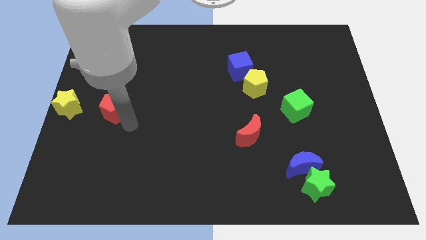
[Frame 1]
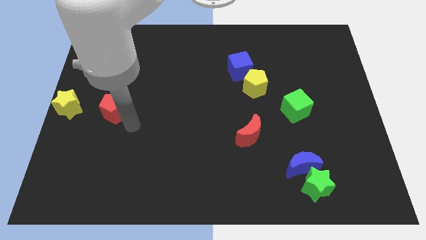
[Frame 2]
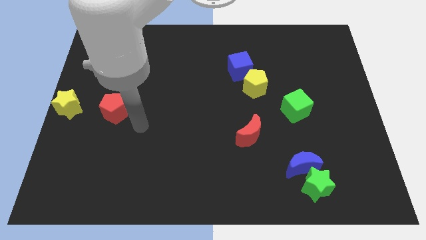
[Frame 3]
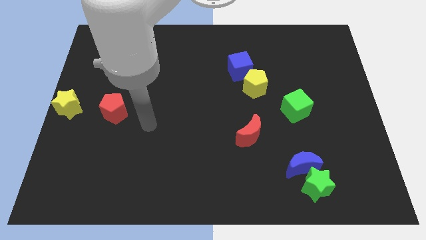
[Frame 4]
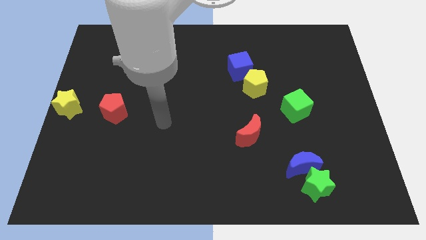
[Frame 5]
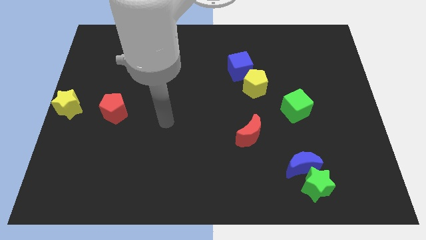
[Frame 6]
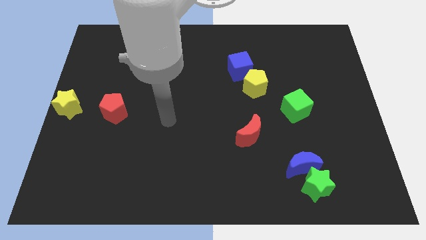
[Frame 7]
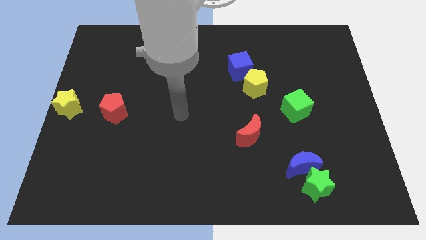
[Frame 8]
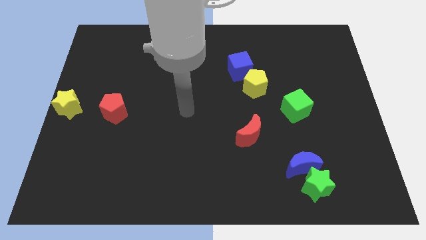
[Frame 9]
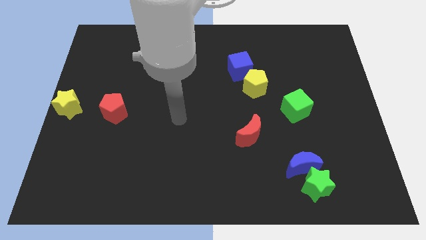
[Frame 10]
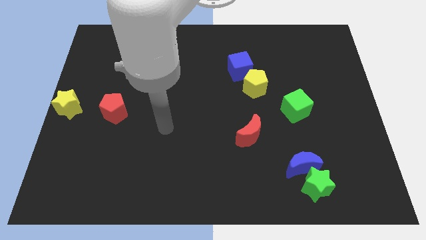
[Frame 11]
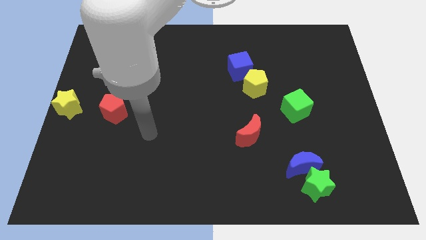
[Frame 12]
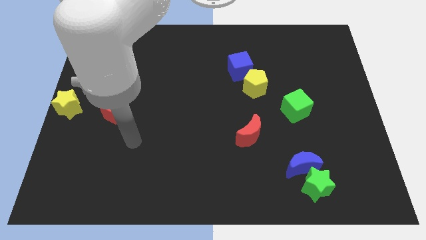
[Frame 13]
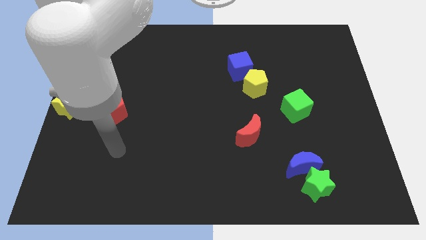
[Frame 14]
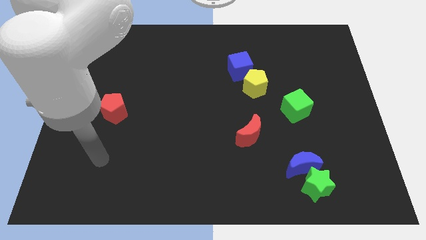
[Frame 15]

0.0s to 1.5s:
move your arm parallel to the bottom of the red pentagon

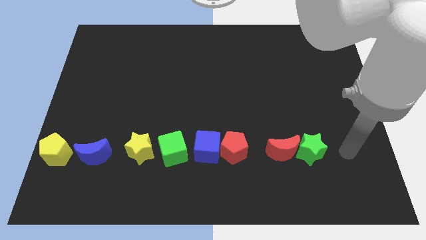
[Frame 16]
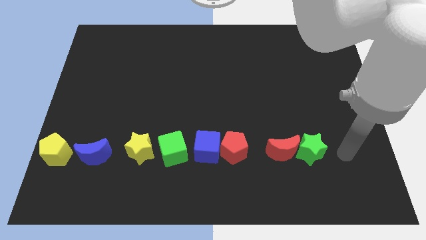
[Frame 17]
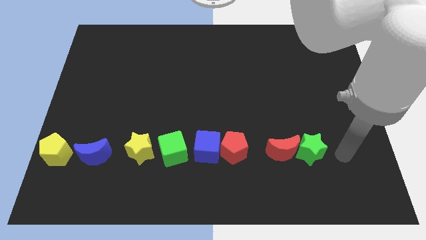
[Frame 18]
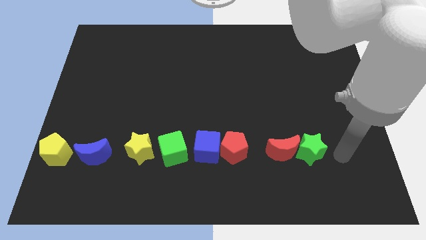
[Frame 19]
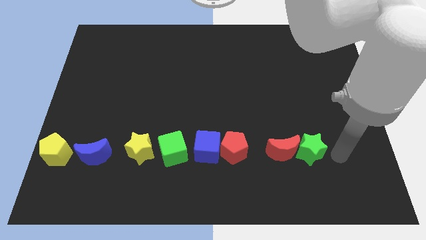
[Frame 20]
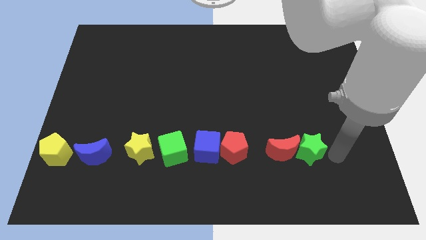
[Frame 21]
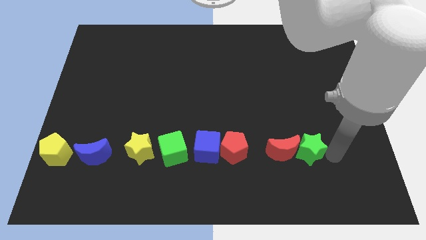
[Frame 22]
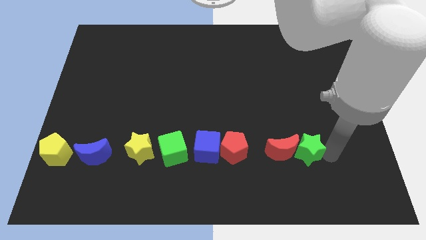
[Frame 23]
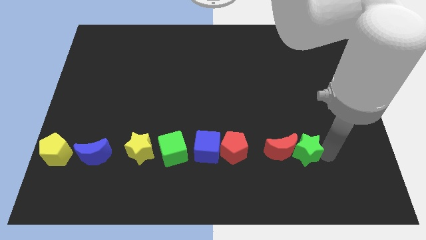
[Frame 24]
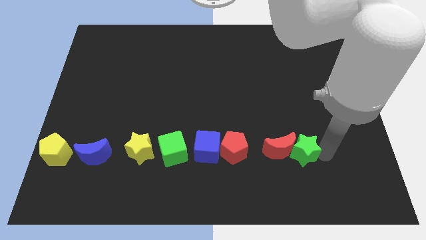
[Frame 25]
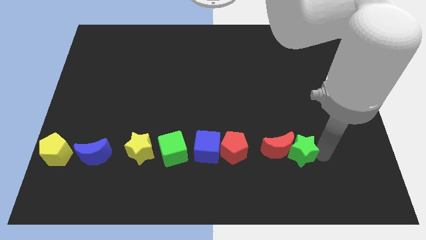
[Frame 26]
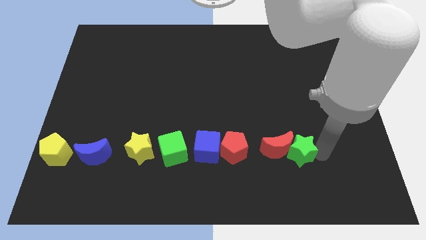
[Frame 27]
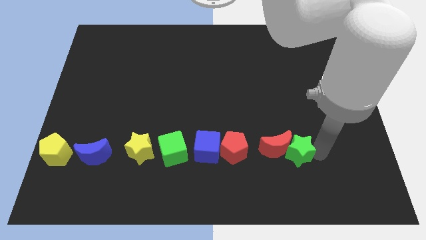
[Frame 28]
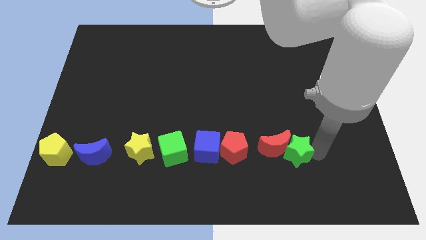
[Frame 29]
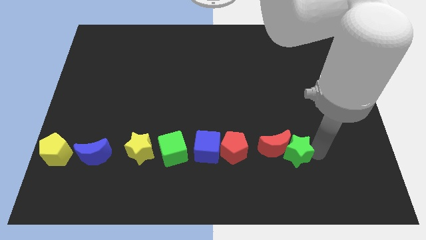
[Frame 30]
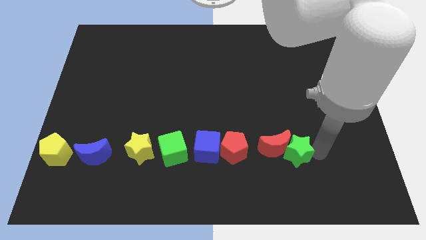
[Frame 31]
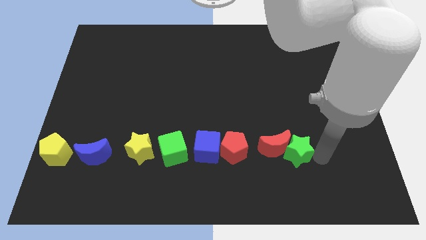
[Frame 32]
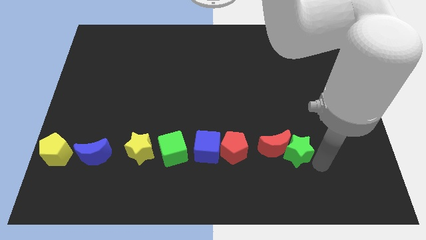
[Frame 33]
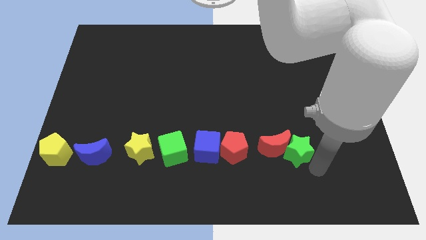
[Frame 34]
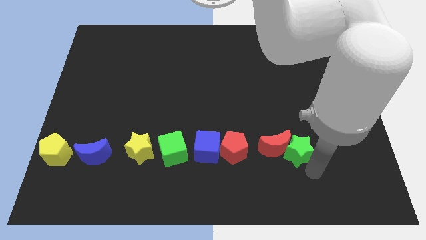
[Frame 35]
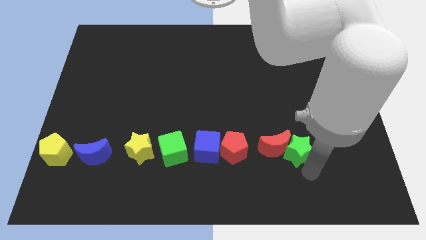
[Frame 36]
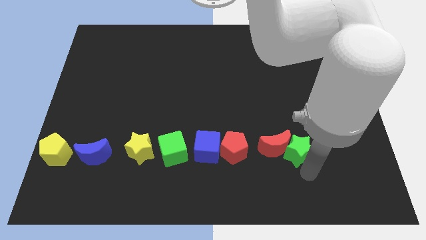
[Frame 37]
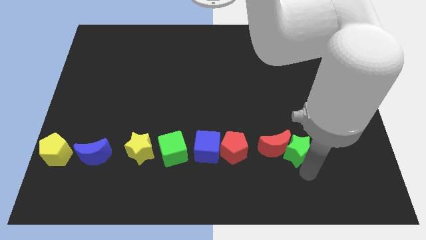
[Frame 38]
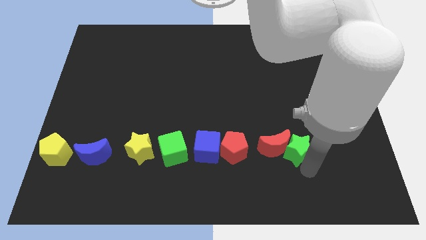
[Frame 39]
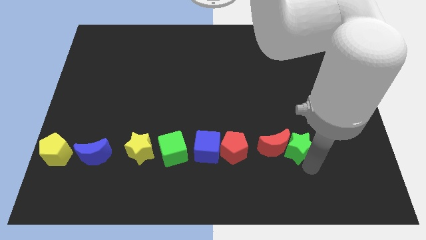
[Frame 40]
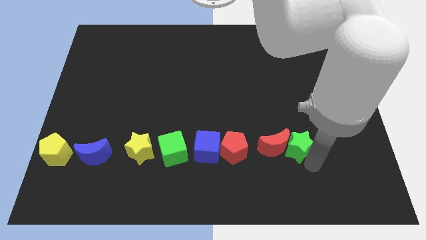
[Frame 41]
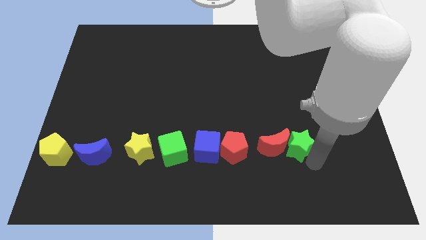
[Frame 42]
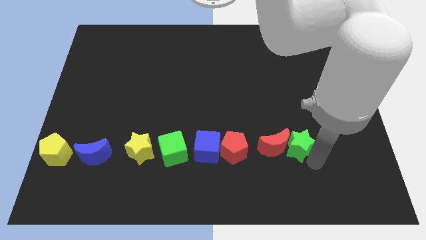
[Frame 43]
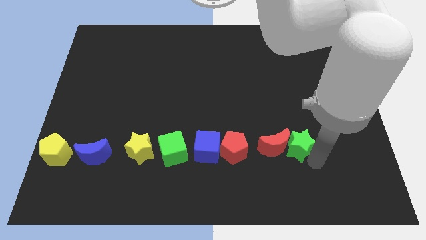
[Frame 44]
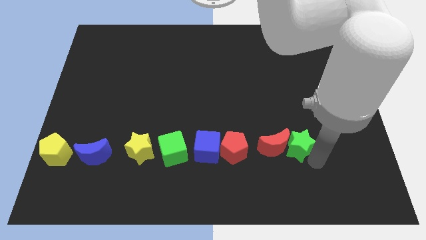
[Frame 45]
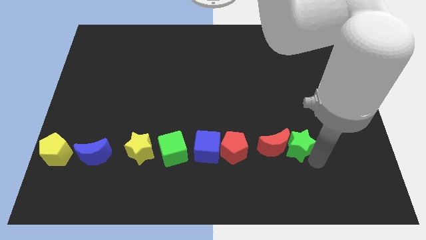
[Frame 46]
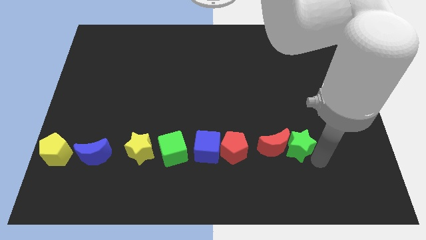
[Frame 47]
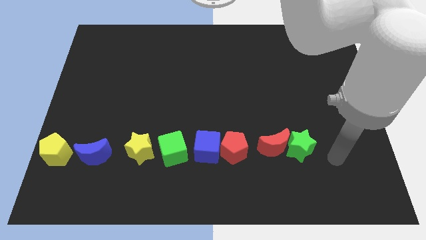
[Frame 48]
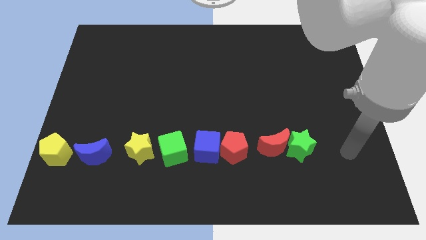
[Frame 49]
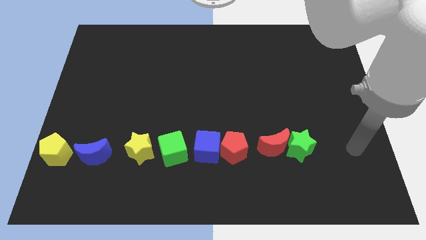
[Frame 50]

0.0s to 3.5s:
move the green star into the red moon

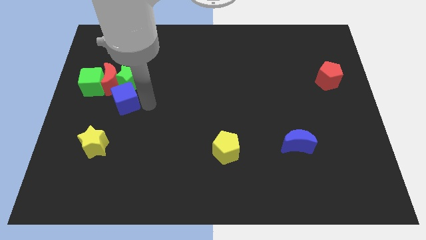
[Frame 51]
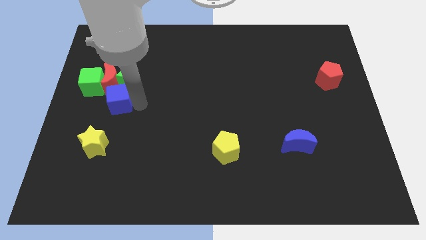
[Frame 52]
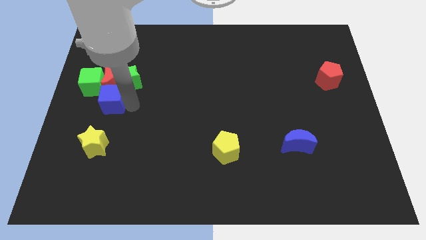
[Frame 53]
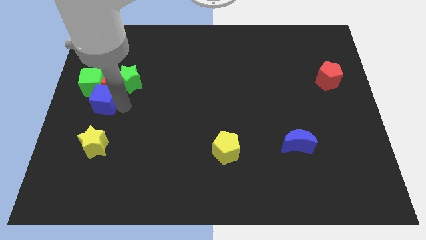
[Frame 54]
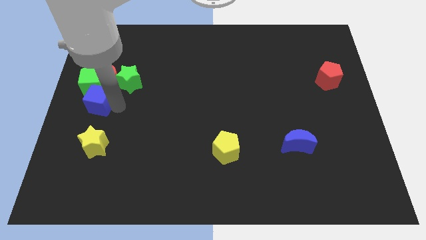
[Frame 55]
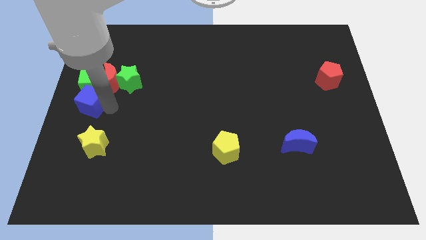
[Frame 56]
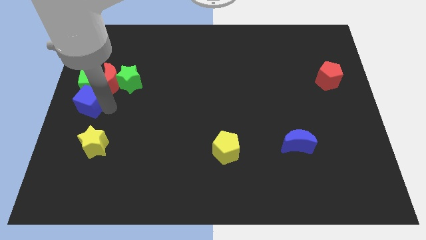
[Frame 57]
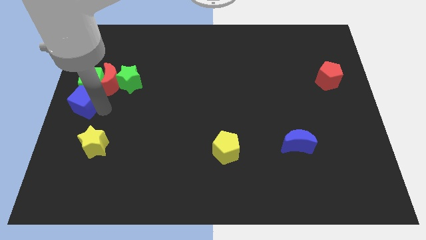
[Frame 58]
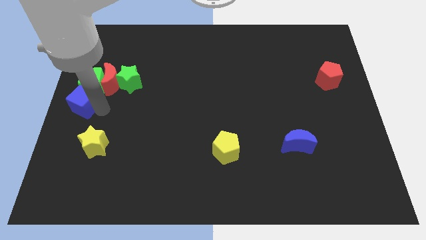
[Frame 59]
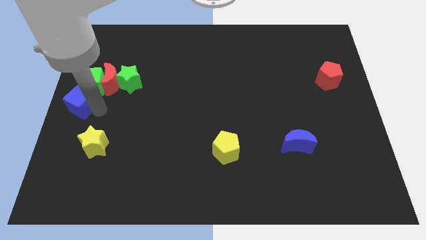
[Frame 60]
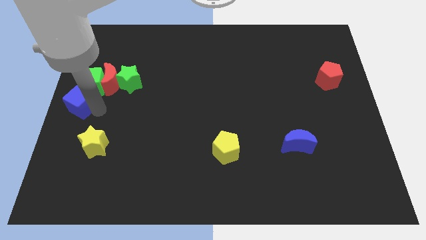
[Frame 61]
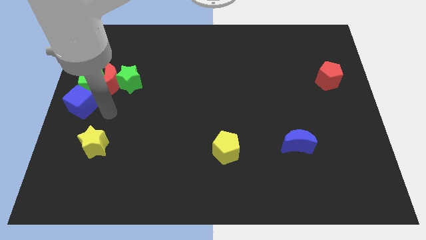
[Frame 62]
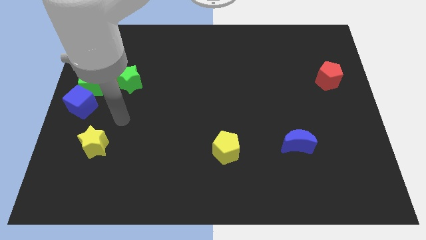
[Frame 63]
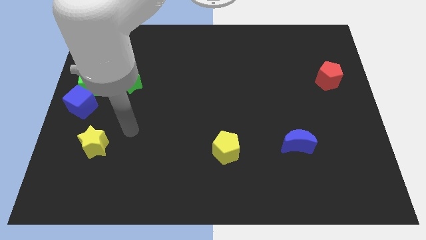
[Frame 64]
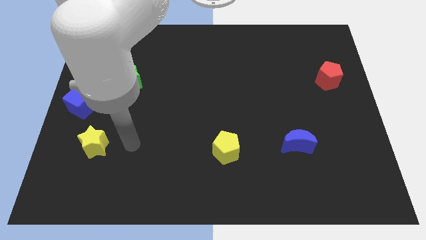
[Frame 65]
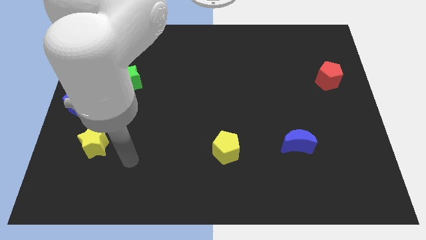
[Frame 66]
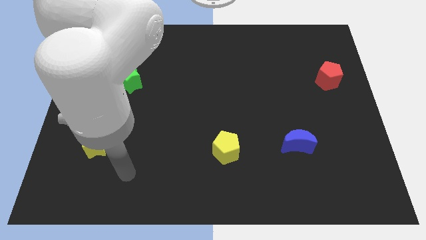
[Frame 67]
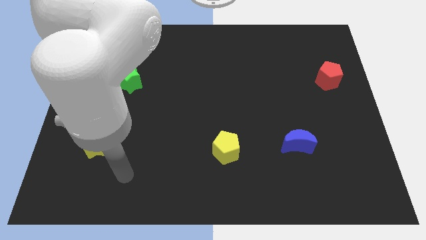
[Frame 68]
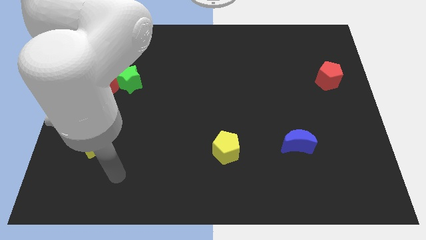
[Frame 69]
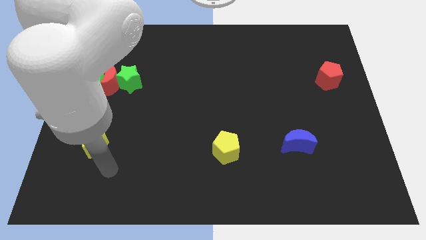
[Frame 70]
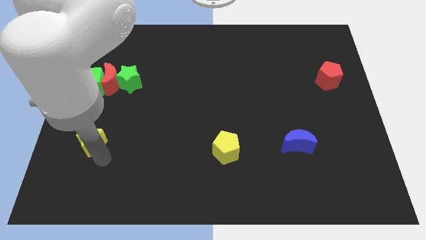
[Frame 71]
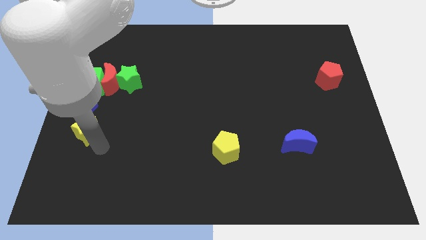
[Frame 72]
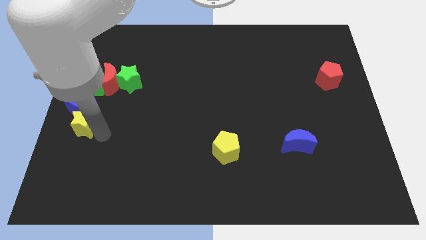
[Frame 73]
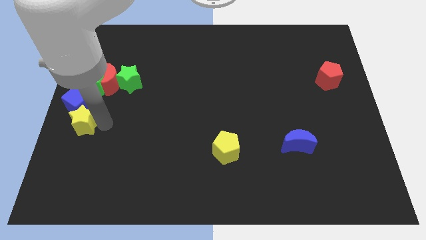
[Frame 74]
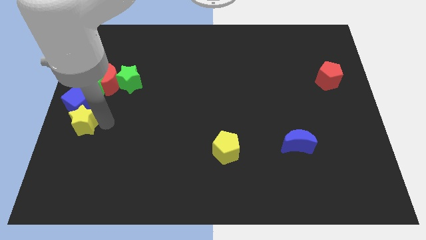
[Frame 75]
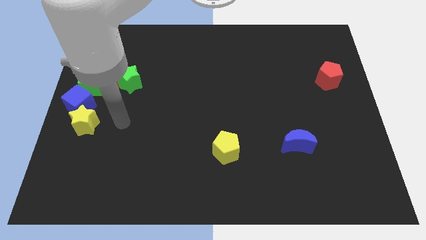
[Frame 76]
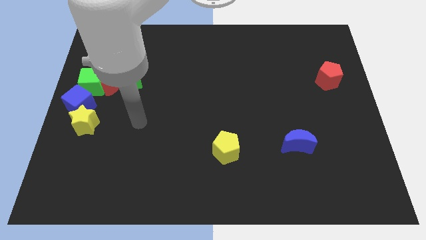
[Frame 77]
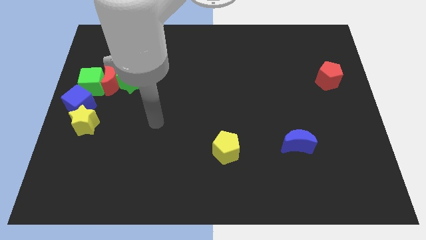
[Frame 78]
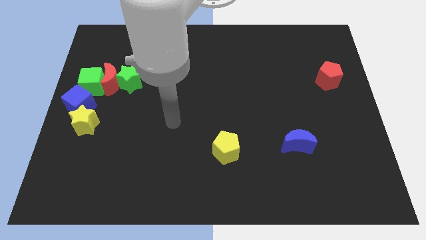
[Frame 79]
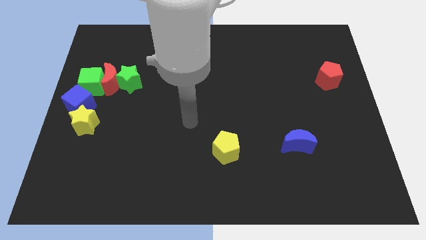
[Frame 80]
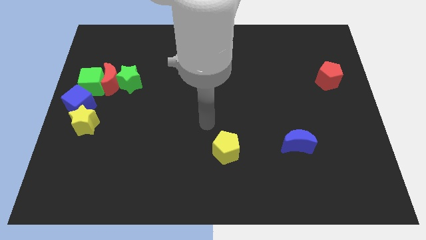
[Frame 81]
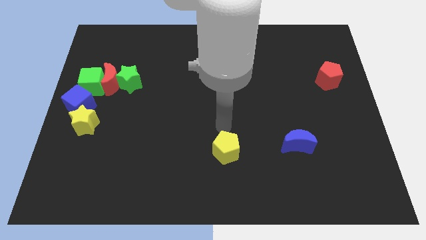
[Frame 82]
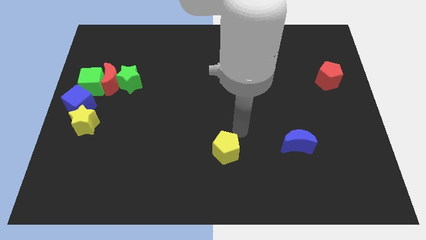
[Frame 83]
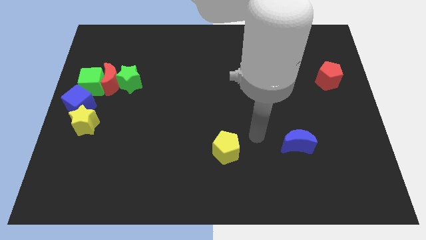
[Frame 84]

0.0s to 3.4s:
place the green star bottom of the blue cube

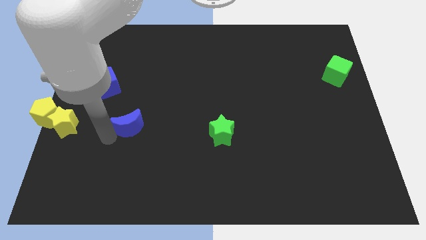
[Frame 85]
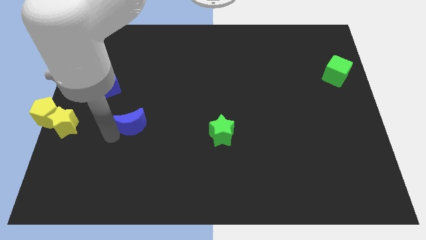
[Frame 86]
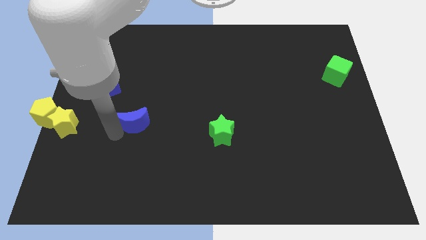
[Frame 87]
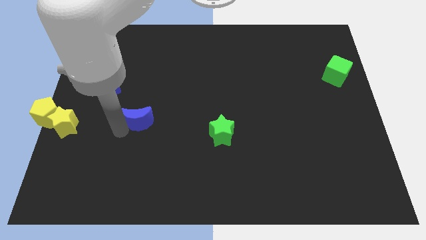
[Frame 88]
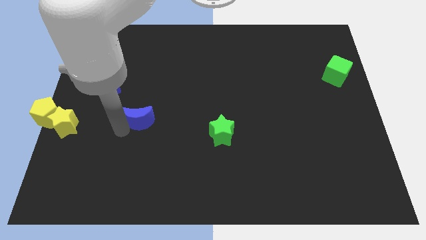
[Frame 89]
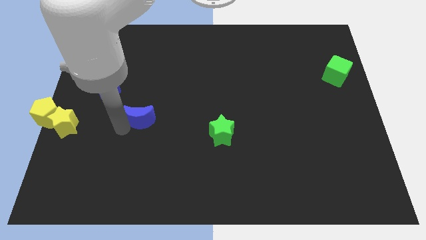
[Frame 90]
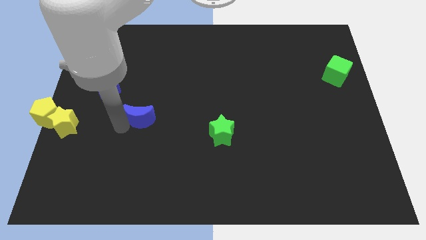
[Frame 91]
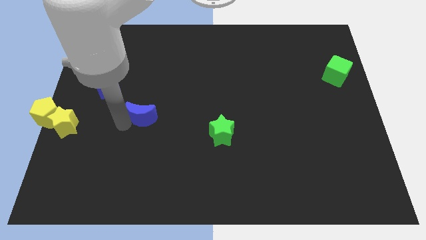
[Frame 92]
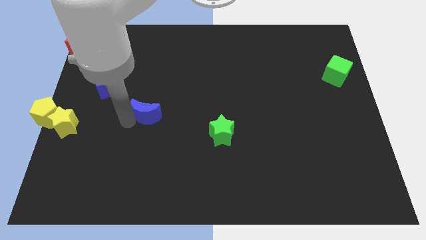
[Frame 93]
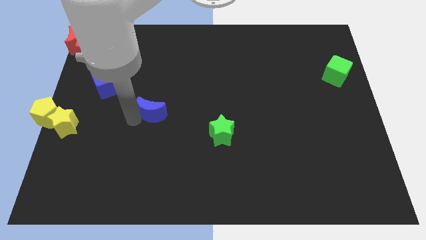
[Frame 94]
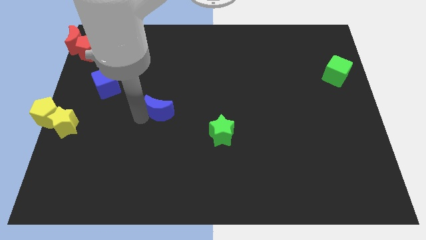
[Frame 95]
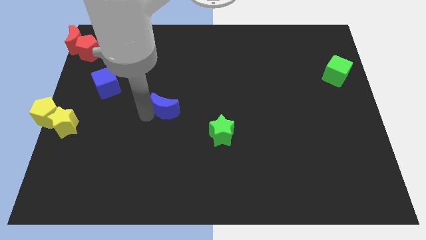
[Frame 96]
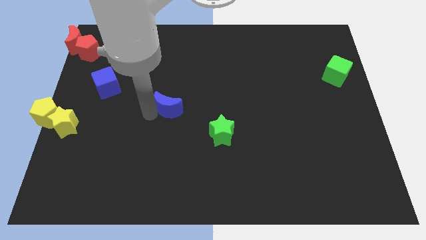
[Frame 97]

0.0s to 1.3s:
slide the blue moon to the center
